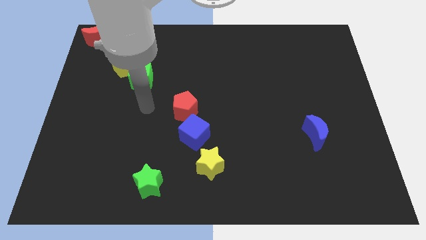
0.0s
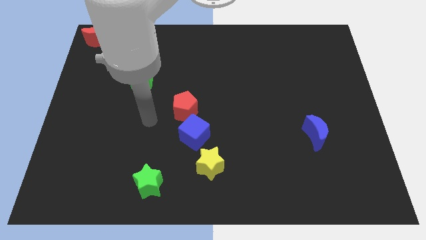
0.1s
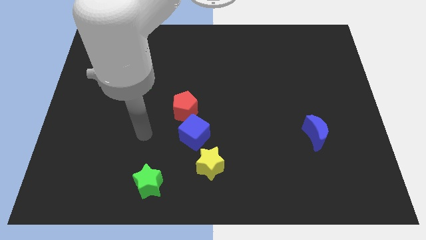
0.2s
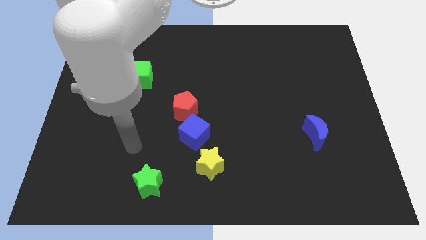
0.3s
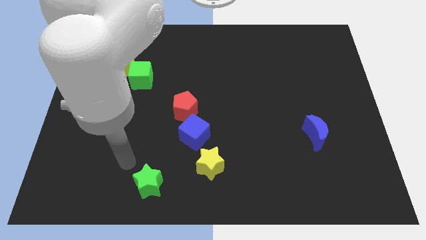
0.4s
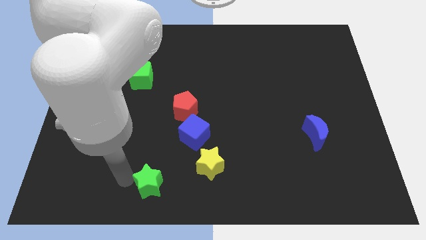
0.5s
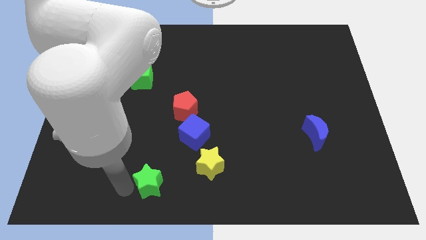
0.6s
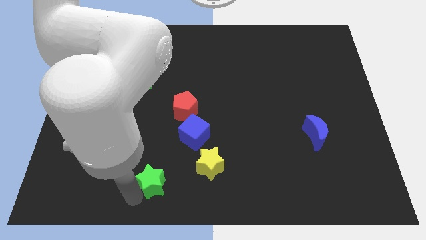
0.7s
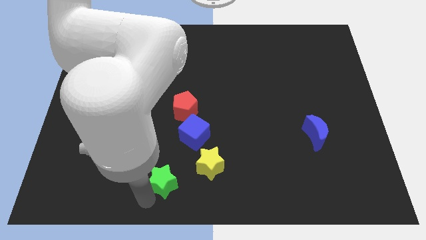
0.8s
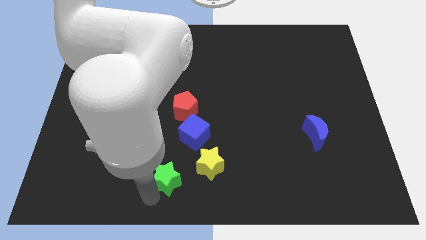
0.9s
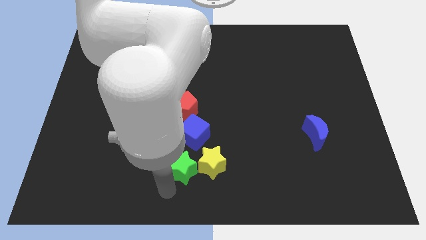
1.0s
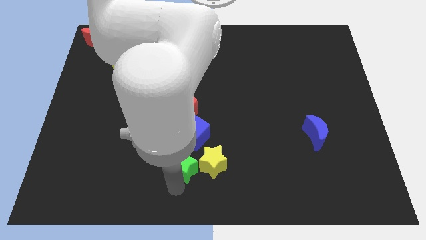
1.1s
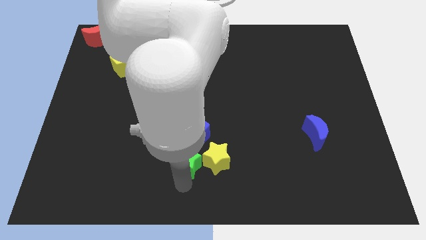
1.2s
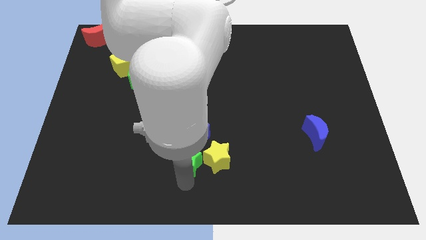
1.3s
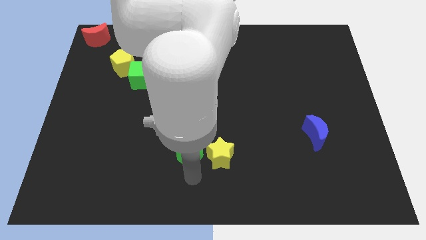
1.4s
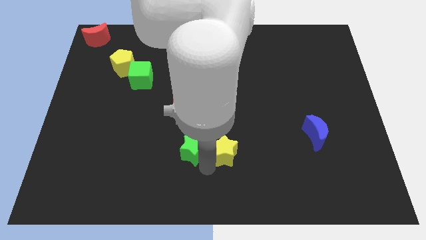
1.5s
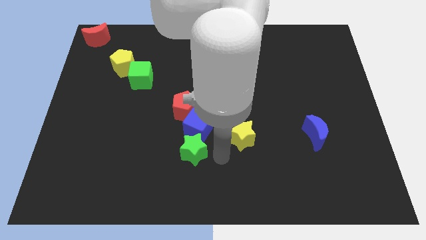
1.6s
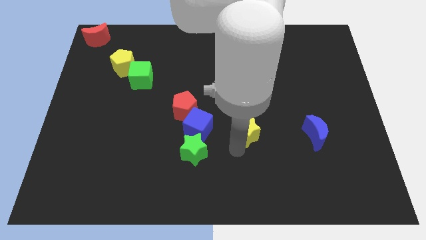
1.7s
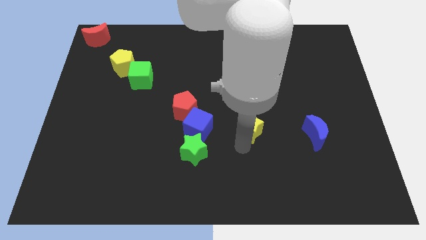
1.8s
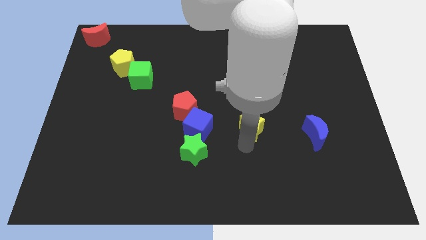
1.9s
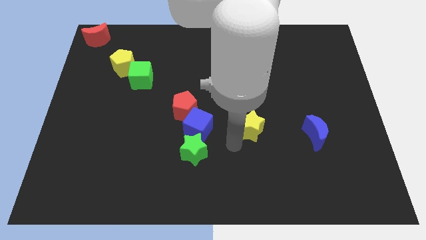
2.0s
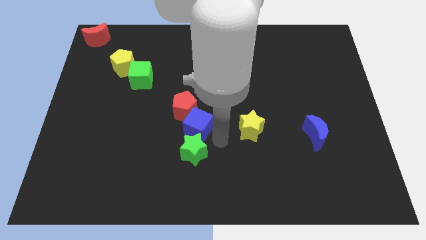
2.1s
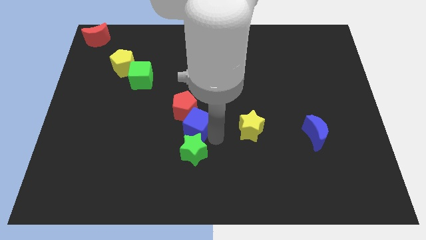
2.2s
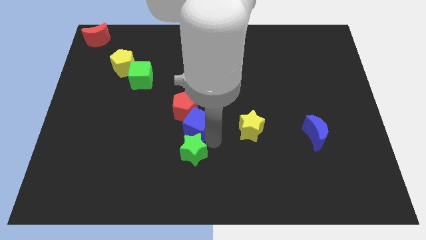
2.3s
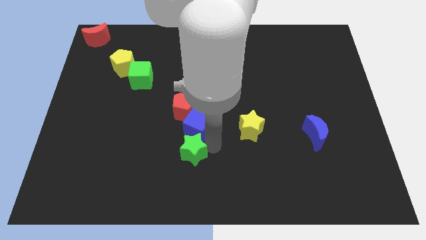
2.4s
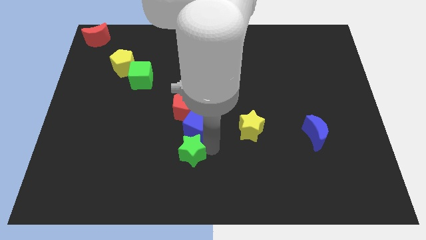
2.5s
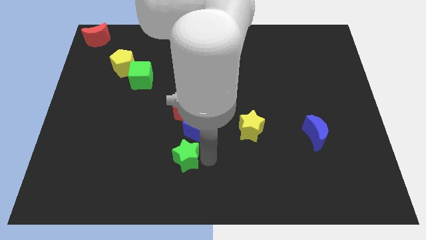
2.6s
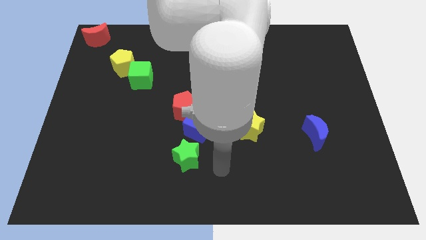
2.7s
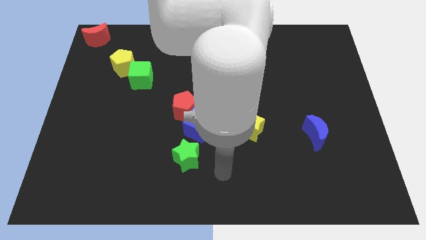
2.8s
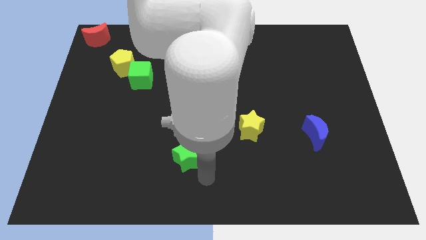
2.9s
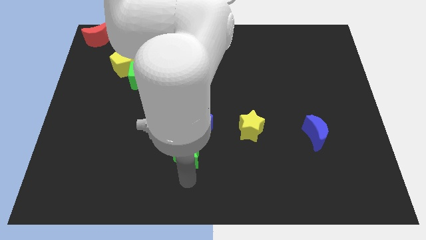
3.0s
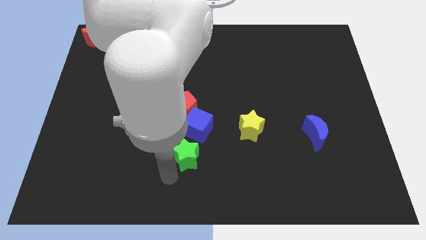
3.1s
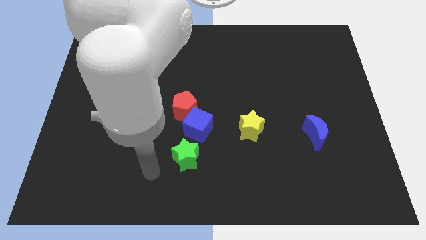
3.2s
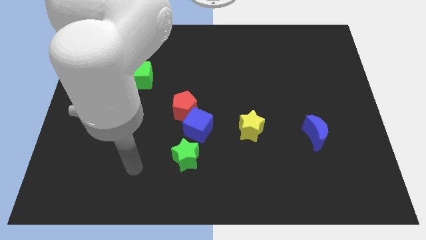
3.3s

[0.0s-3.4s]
separate the green star yellow star from each other

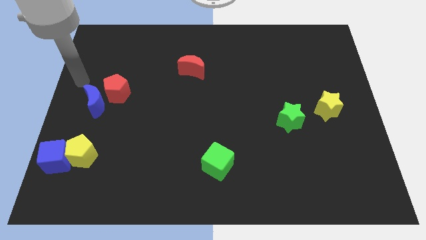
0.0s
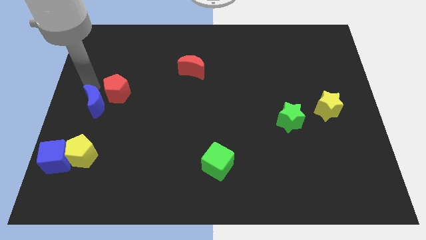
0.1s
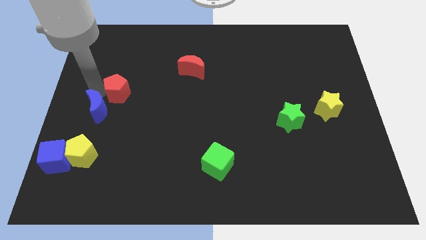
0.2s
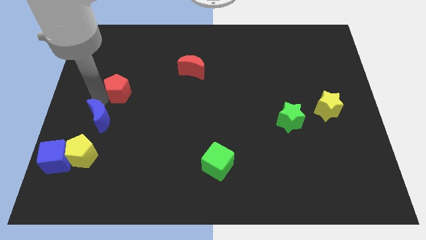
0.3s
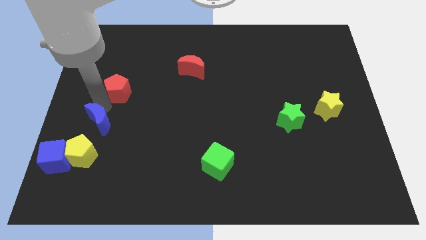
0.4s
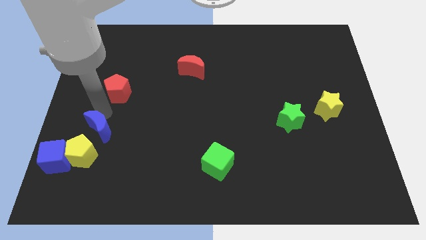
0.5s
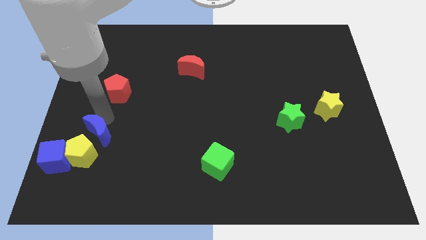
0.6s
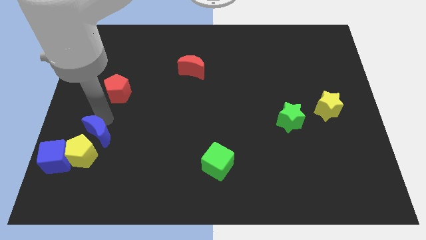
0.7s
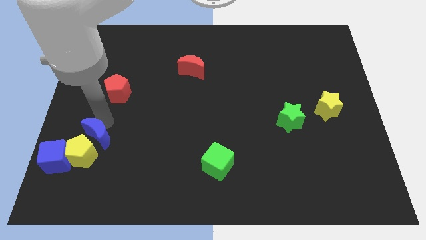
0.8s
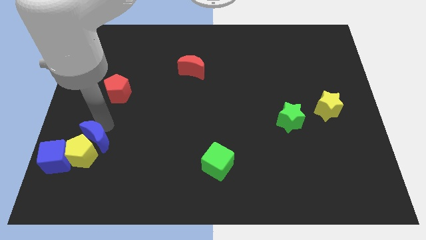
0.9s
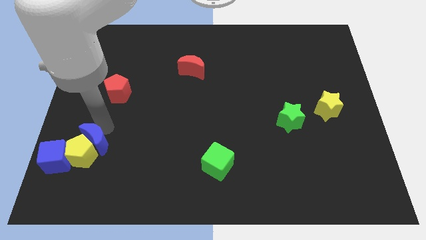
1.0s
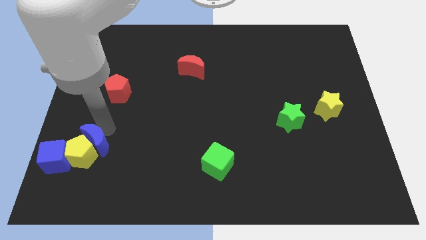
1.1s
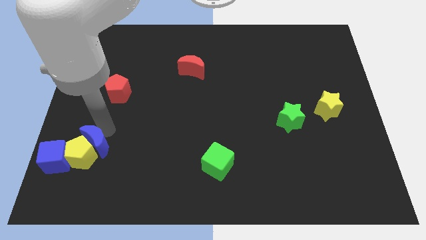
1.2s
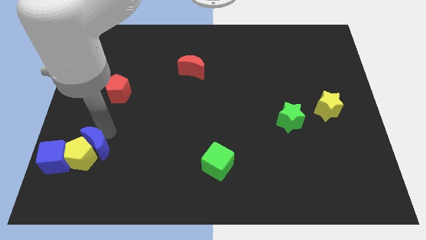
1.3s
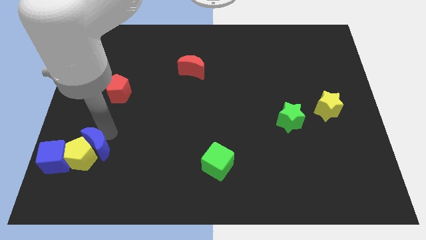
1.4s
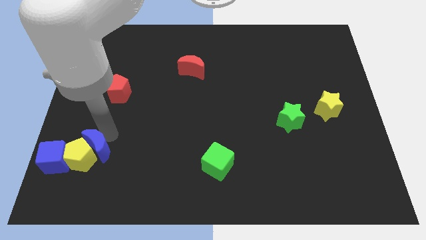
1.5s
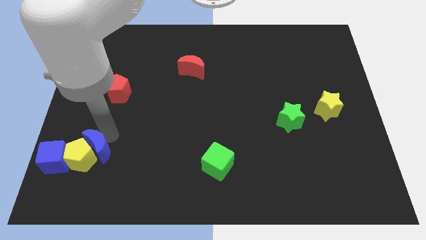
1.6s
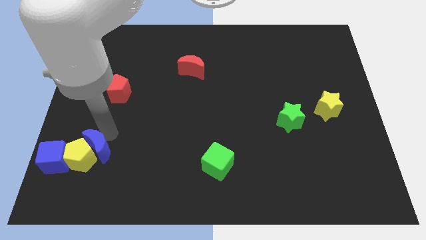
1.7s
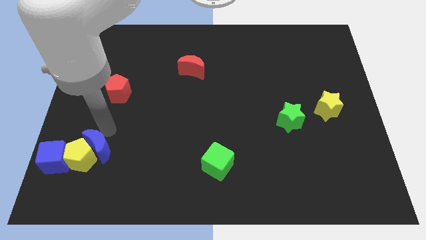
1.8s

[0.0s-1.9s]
push the blue crescent into the yellow pentagon

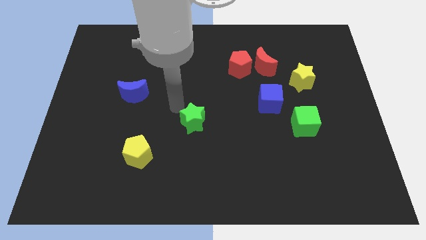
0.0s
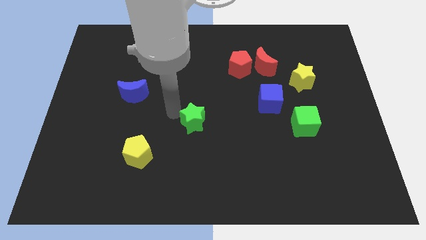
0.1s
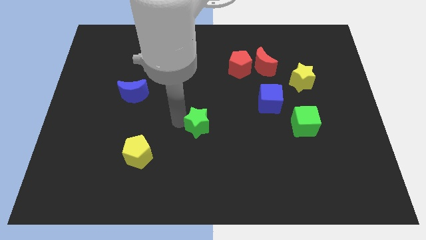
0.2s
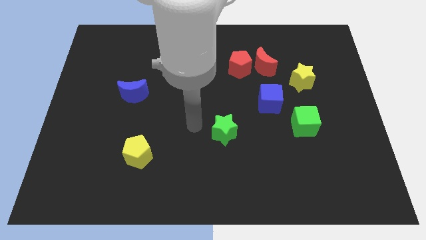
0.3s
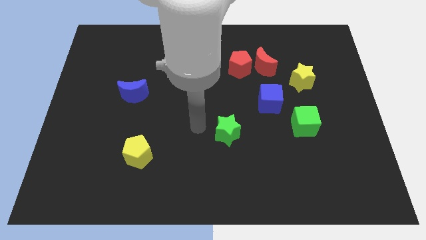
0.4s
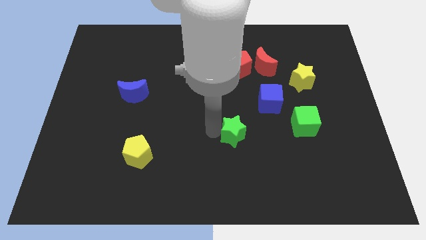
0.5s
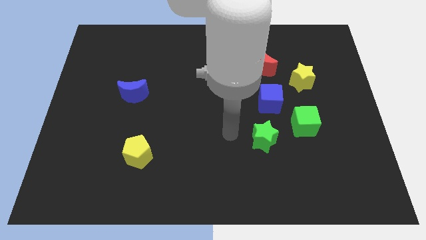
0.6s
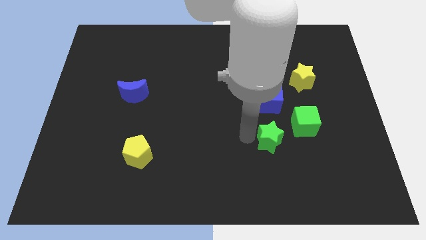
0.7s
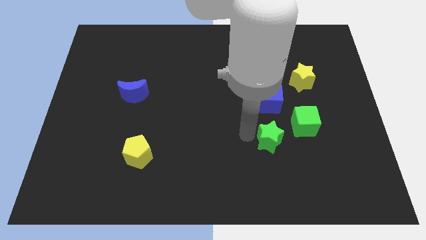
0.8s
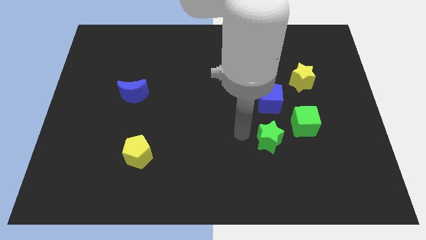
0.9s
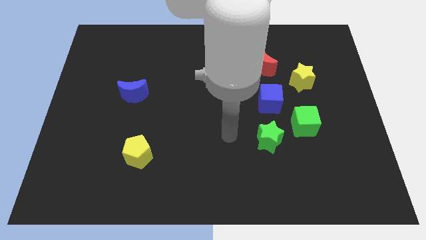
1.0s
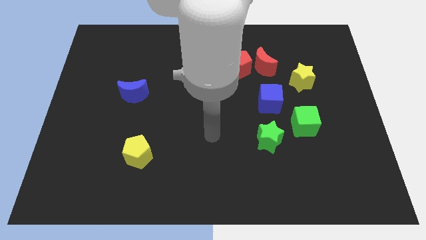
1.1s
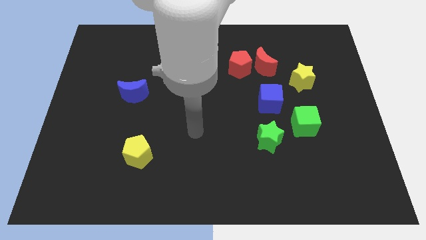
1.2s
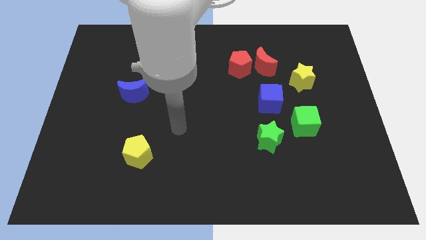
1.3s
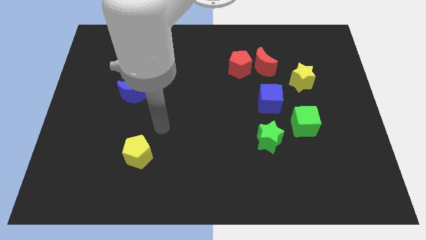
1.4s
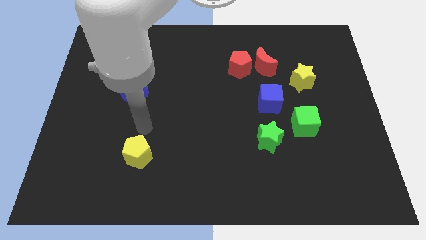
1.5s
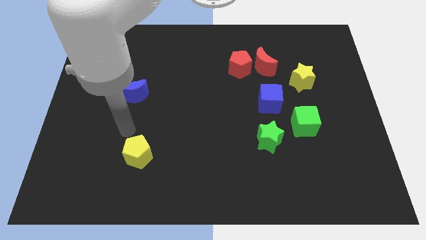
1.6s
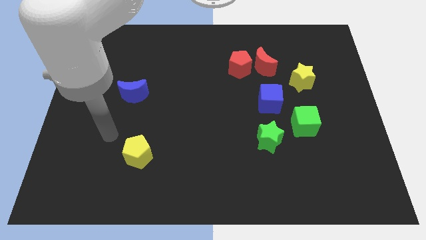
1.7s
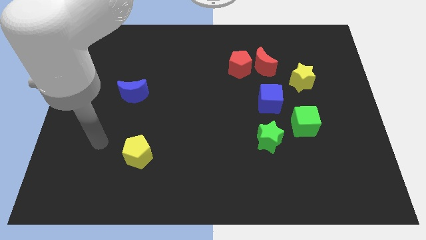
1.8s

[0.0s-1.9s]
move green star left below the green cube

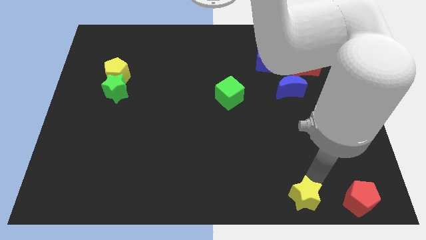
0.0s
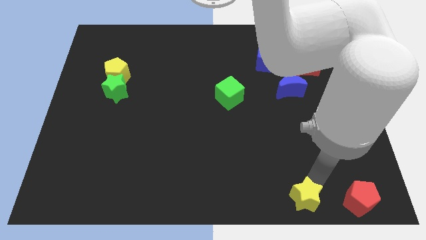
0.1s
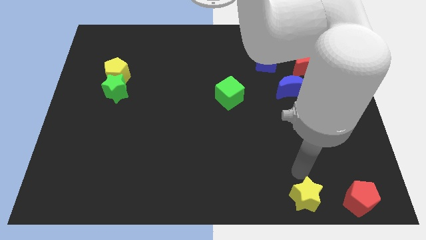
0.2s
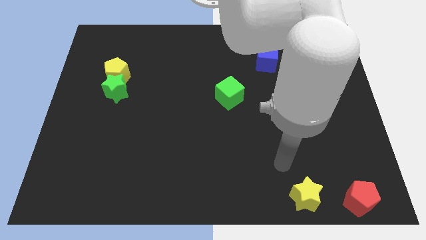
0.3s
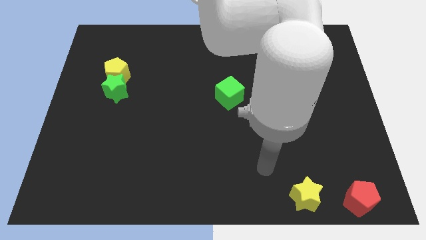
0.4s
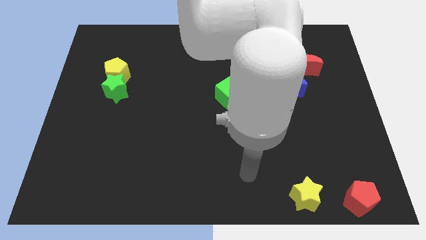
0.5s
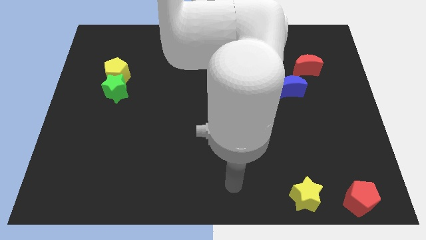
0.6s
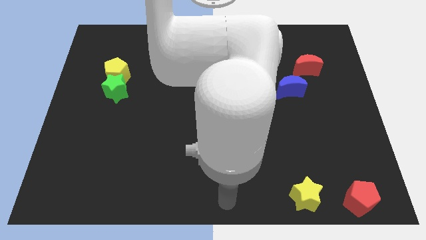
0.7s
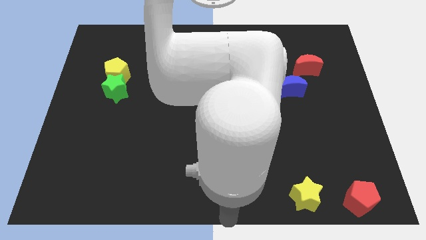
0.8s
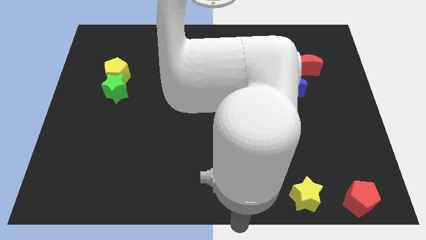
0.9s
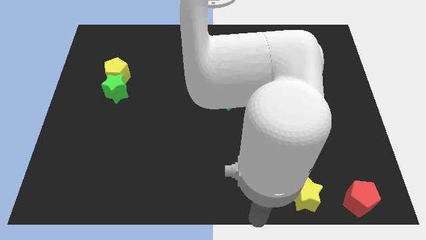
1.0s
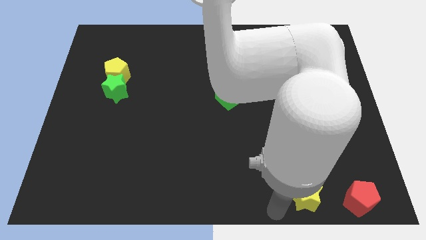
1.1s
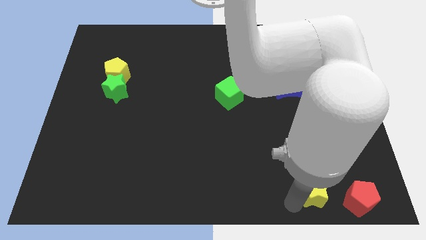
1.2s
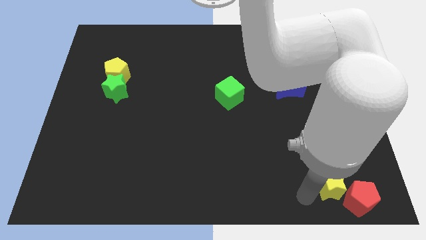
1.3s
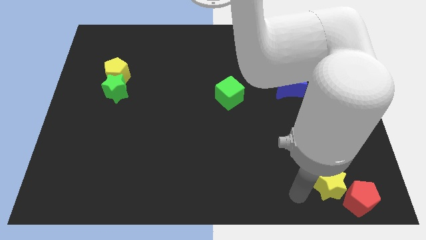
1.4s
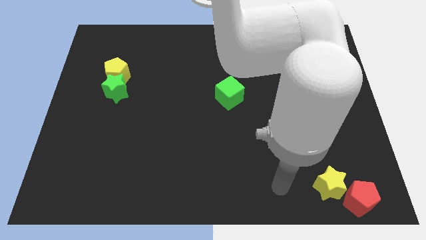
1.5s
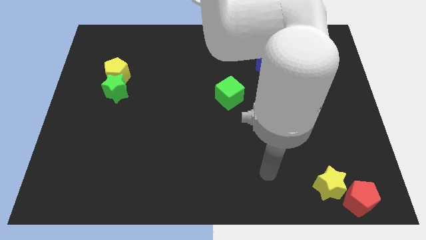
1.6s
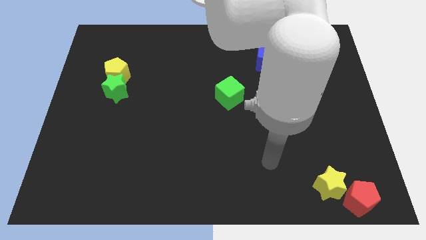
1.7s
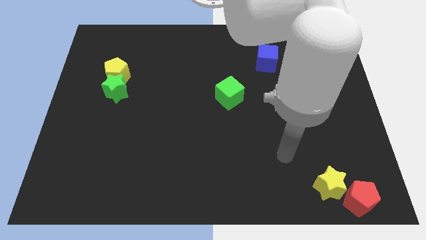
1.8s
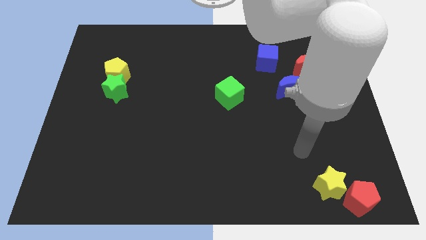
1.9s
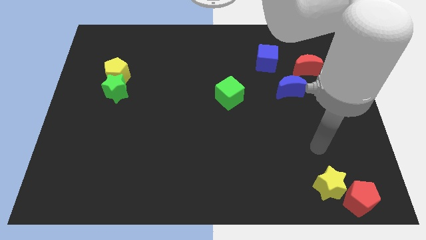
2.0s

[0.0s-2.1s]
place the yellow star diagonally top left to red pentagon
